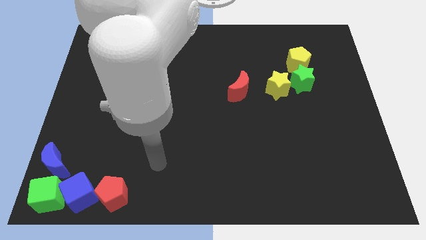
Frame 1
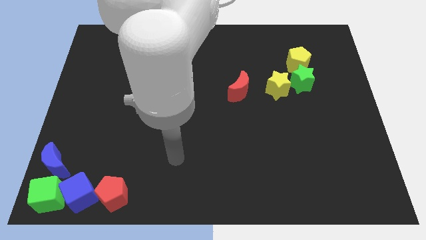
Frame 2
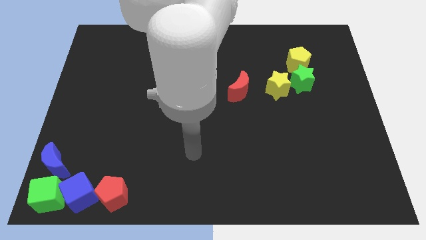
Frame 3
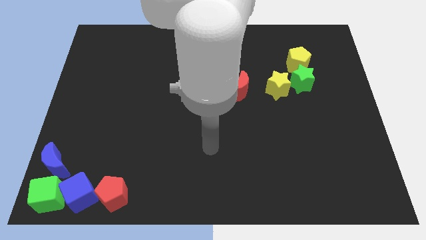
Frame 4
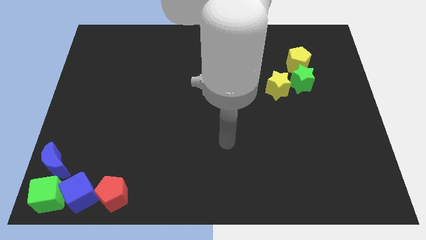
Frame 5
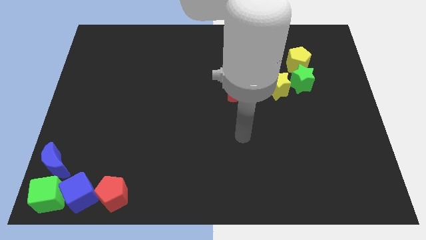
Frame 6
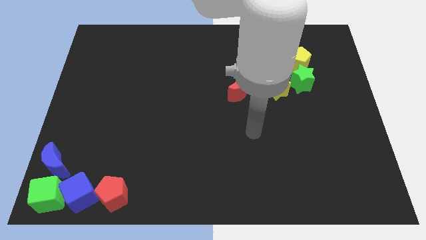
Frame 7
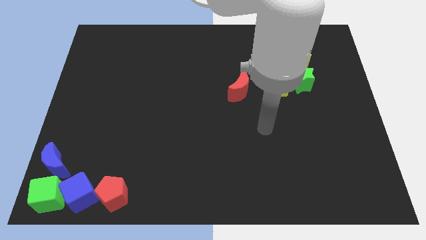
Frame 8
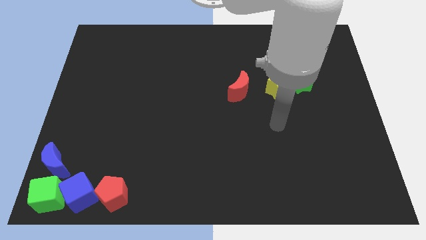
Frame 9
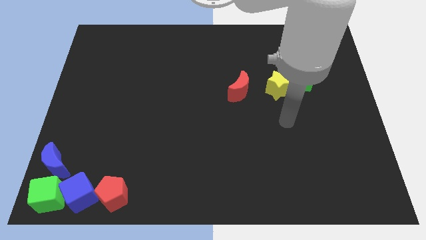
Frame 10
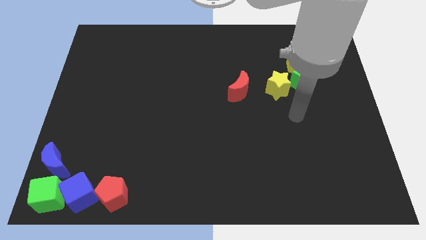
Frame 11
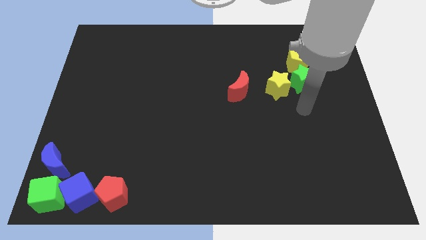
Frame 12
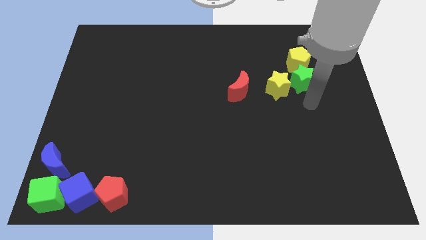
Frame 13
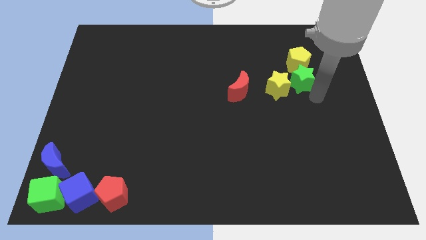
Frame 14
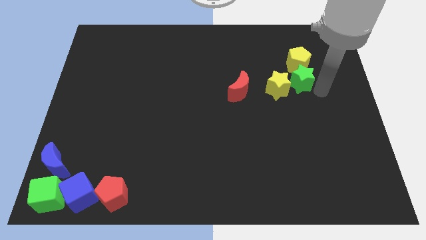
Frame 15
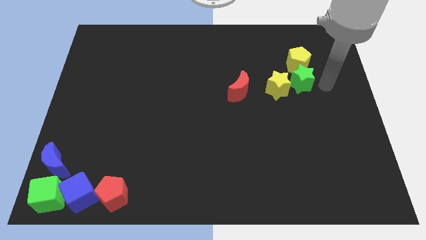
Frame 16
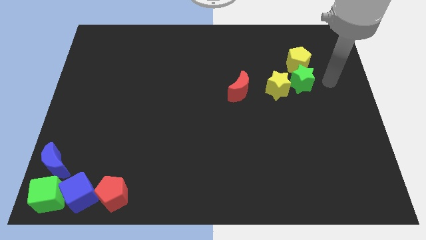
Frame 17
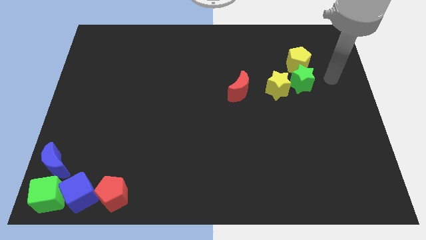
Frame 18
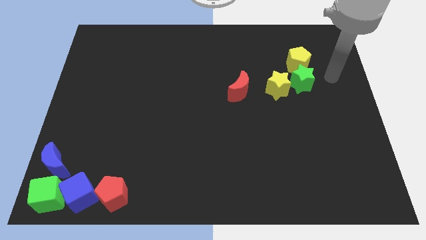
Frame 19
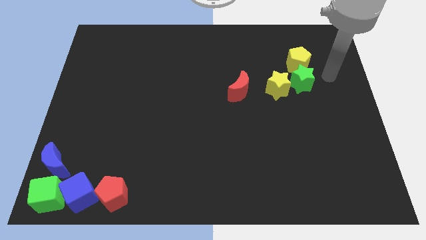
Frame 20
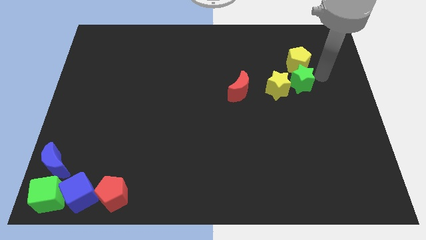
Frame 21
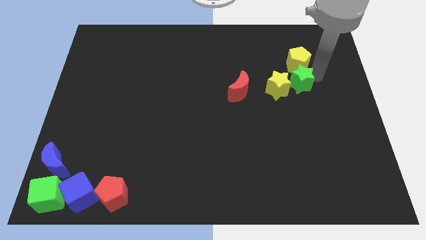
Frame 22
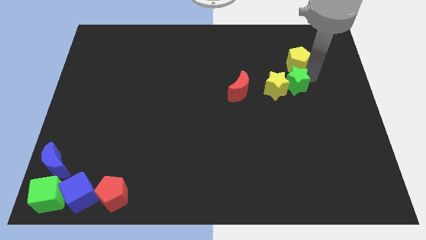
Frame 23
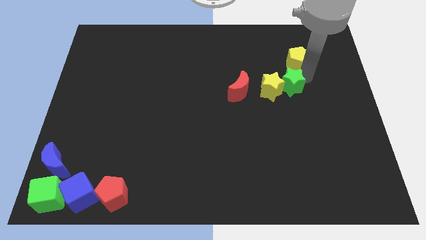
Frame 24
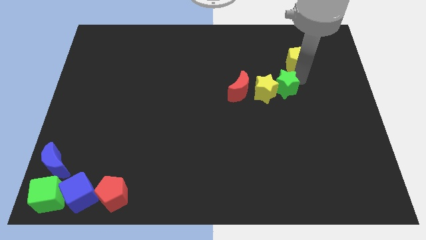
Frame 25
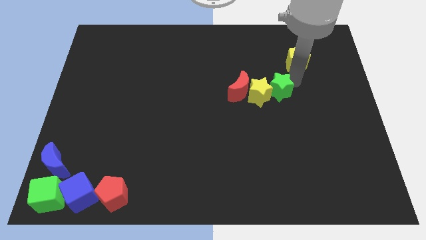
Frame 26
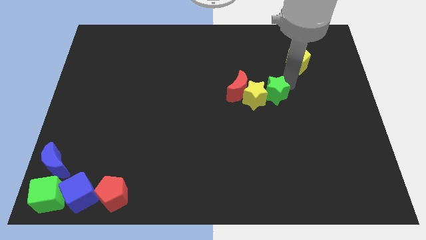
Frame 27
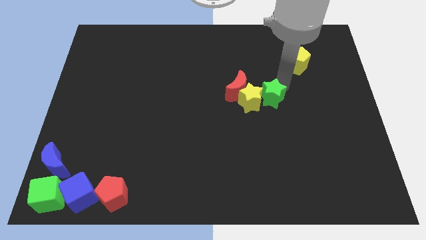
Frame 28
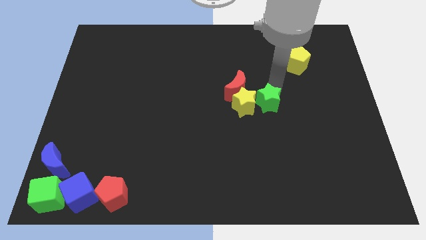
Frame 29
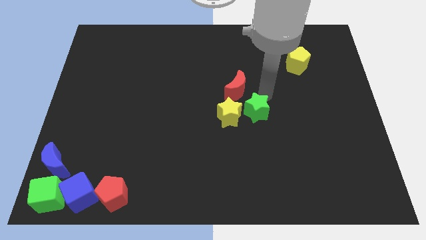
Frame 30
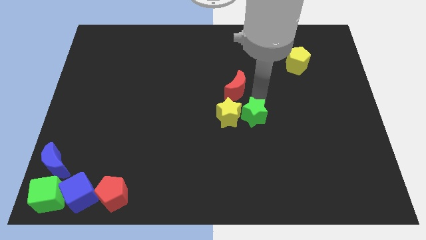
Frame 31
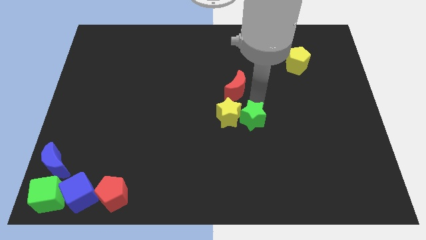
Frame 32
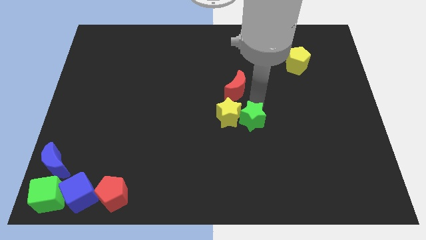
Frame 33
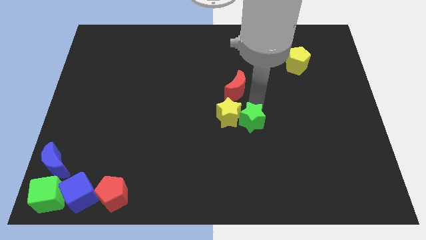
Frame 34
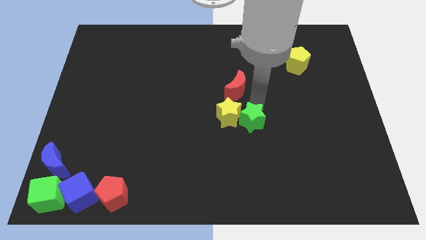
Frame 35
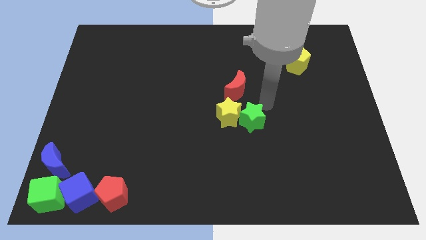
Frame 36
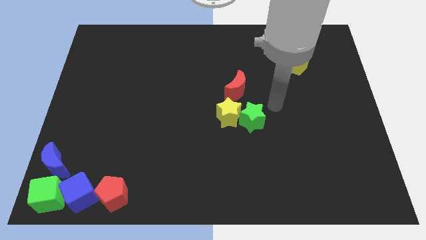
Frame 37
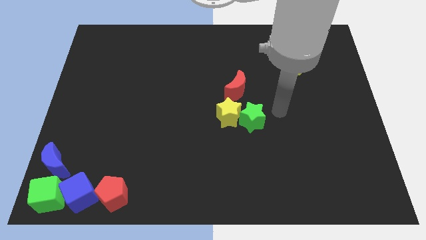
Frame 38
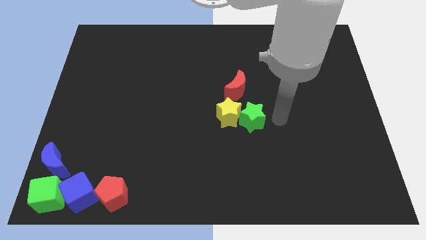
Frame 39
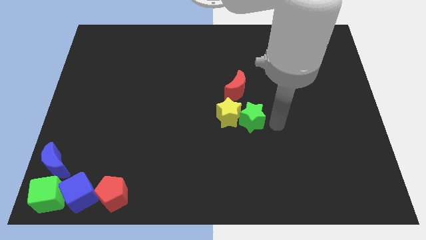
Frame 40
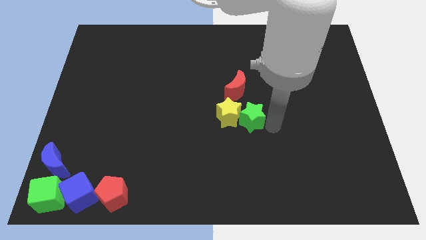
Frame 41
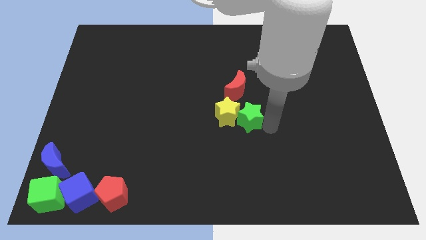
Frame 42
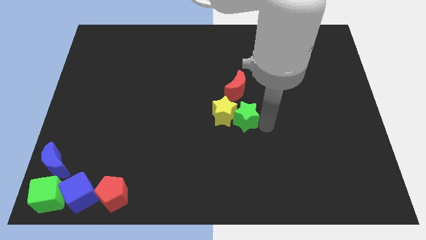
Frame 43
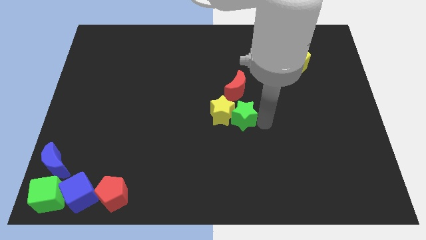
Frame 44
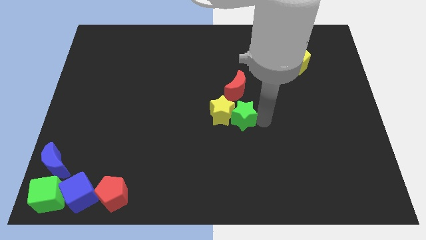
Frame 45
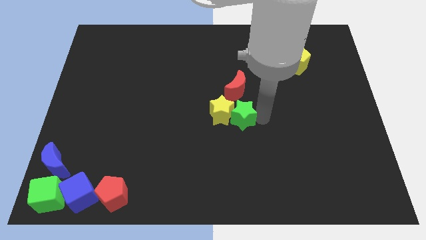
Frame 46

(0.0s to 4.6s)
put both the stars below the red moon

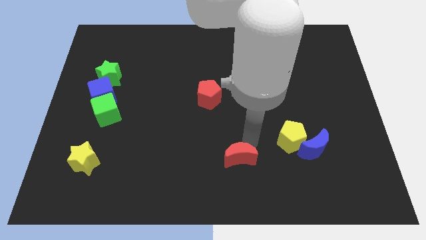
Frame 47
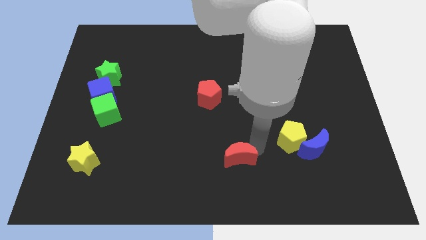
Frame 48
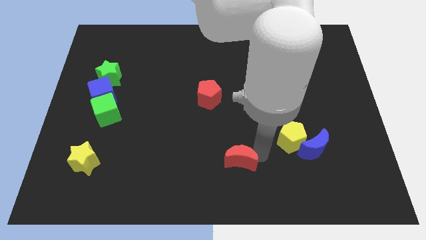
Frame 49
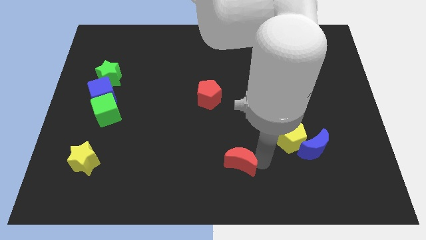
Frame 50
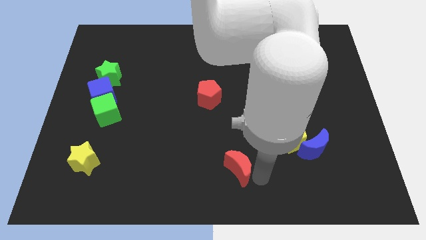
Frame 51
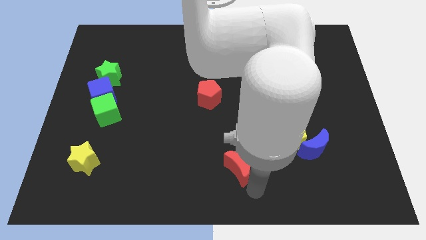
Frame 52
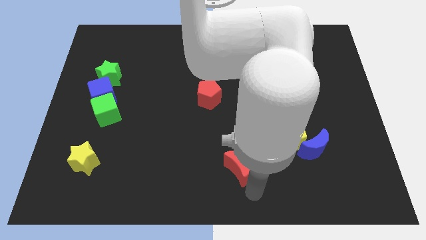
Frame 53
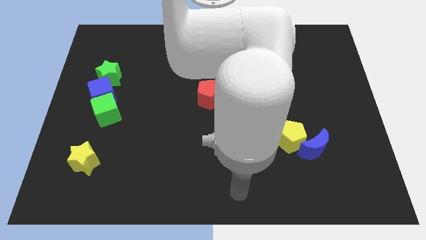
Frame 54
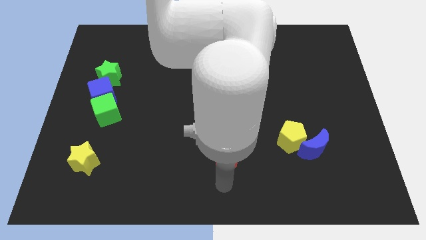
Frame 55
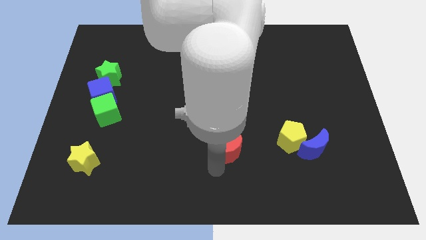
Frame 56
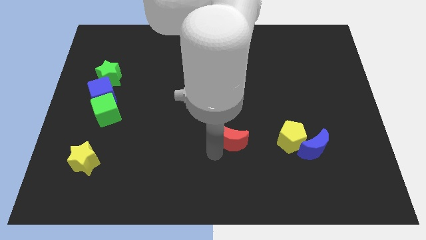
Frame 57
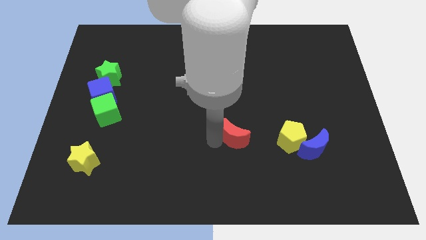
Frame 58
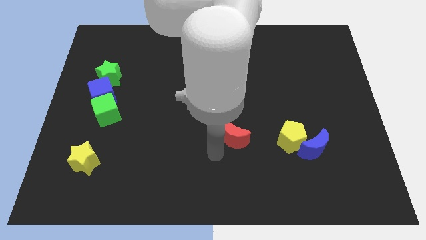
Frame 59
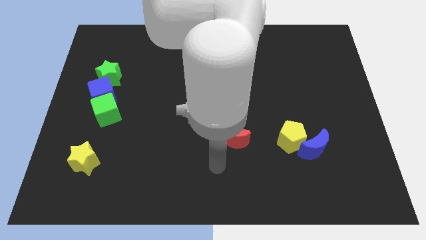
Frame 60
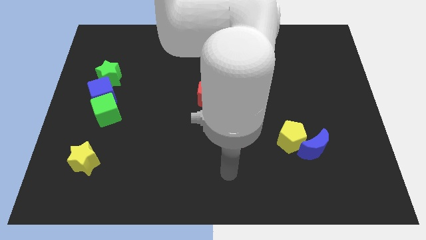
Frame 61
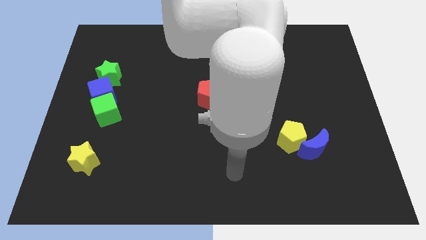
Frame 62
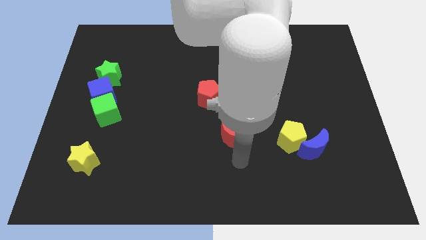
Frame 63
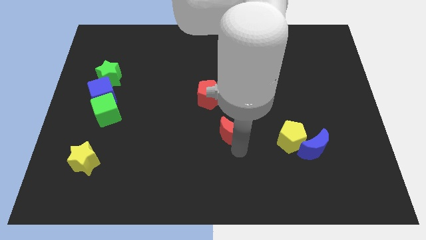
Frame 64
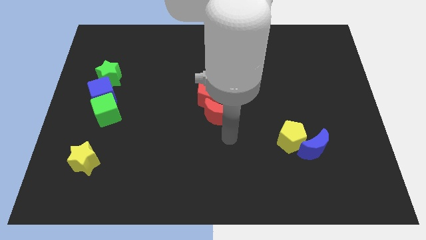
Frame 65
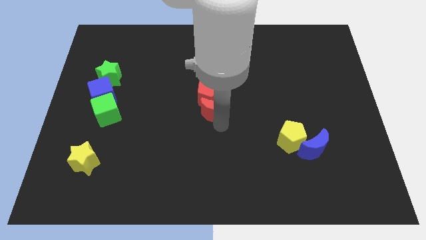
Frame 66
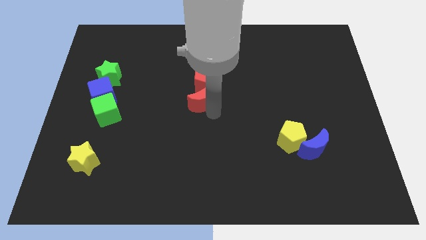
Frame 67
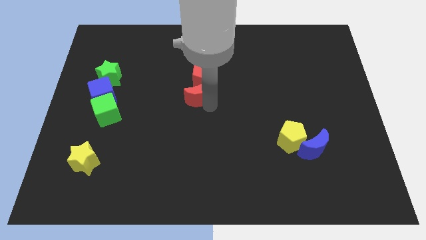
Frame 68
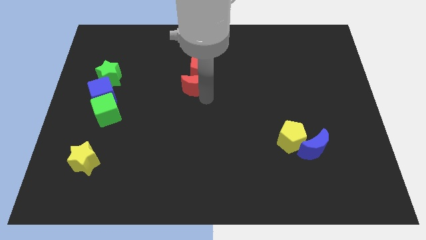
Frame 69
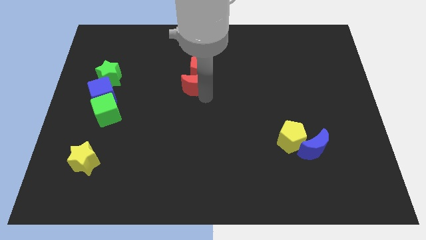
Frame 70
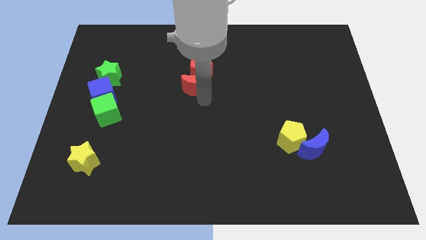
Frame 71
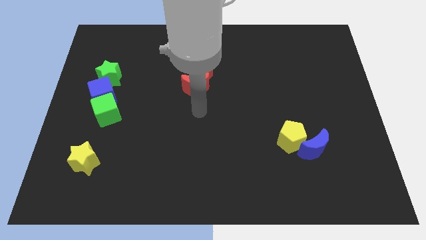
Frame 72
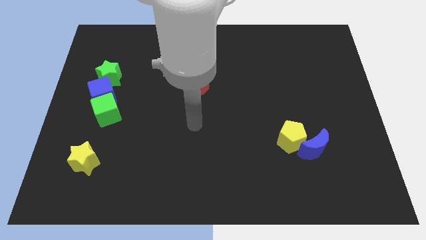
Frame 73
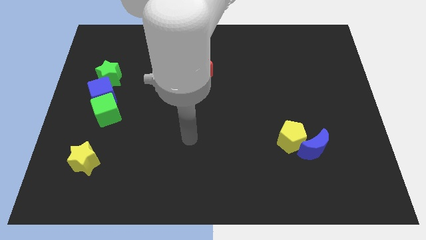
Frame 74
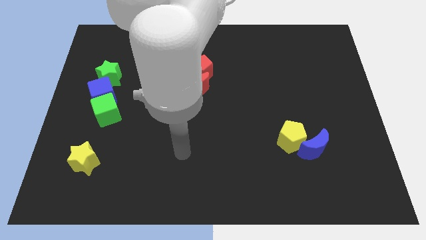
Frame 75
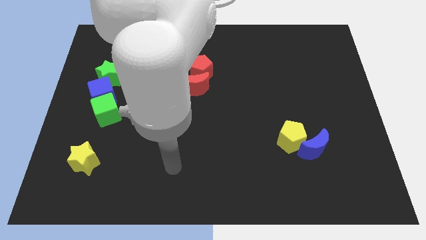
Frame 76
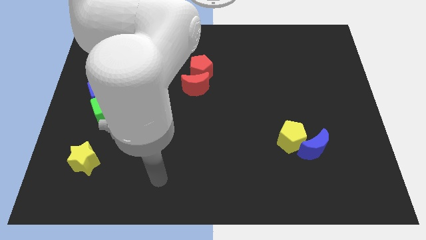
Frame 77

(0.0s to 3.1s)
move the red crescent into the red pentagon

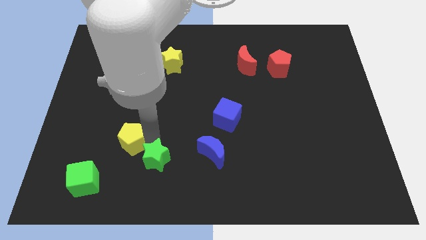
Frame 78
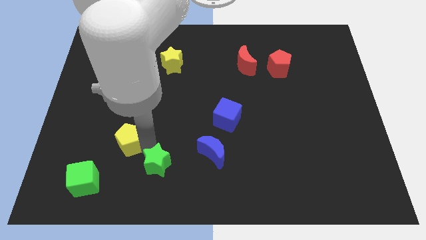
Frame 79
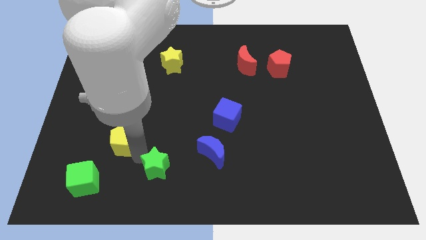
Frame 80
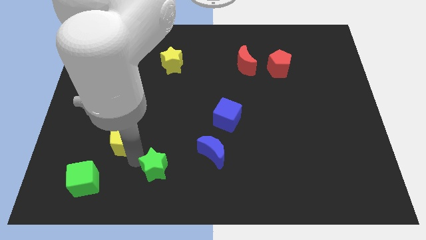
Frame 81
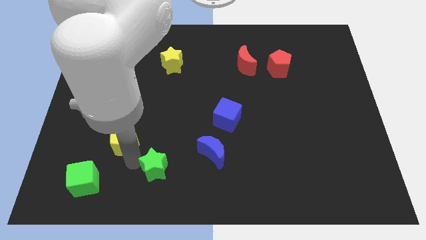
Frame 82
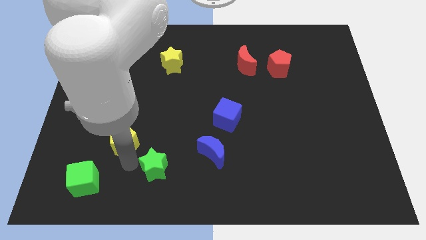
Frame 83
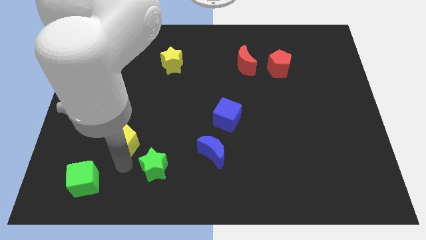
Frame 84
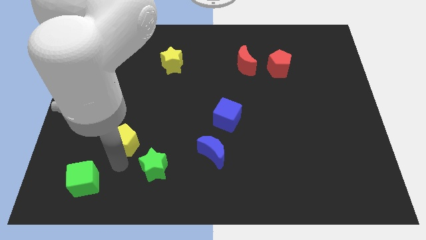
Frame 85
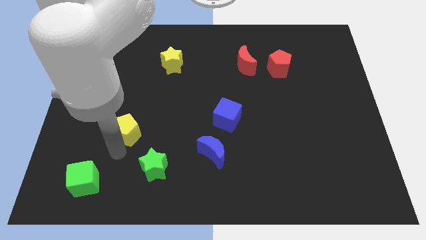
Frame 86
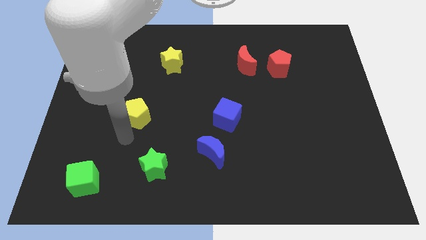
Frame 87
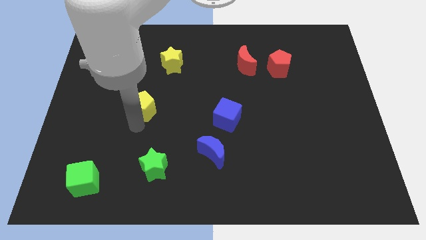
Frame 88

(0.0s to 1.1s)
separate yellow pentagon and green star

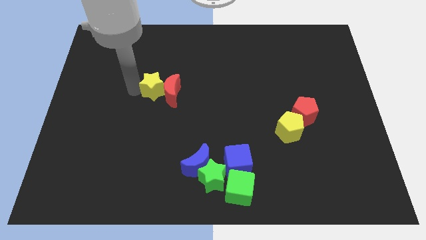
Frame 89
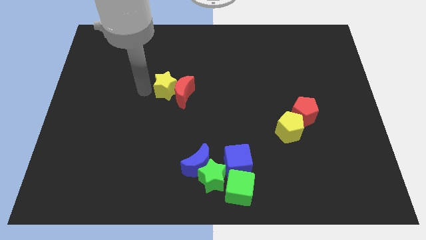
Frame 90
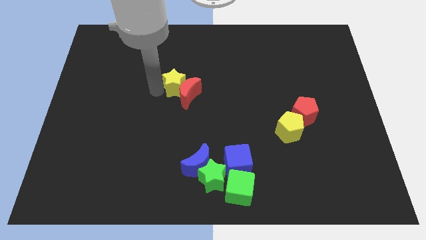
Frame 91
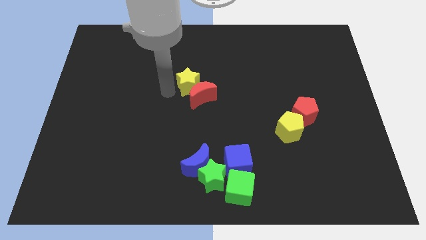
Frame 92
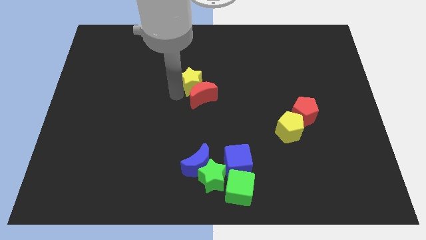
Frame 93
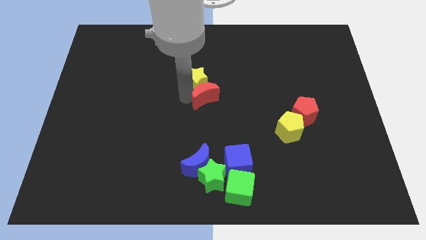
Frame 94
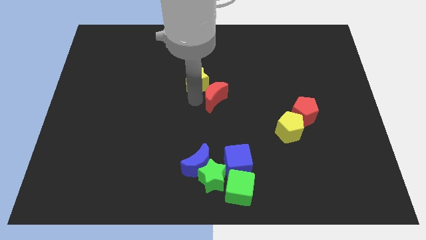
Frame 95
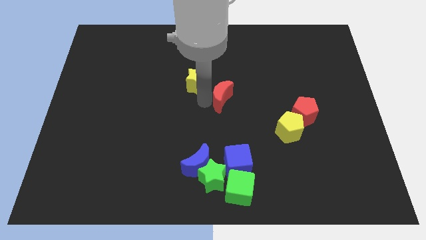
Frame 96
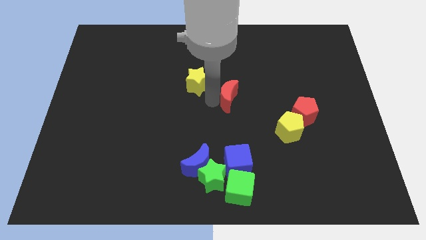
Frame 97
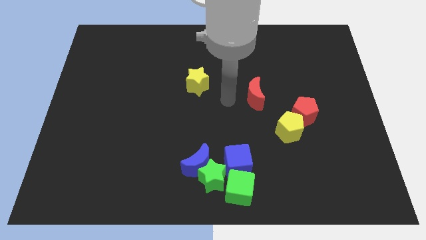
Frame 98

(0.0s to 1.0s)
separate the red crescent from the yellow star
